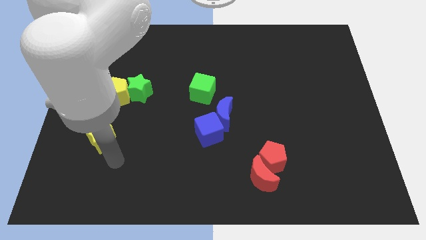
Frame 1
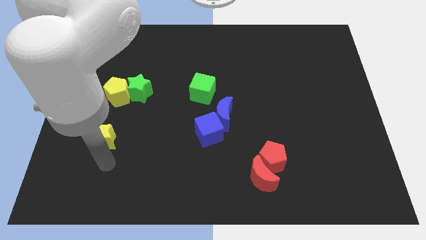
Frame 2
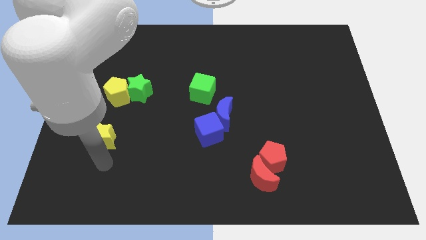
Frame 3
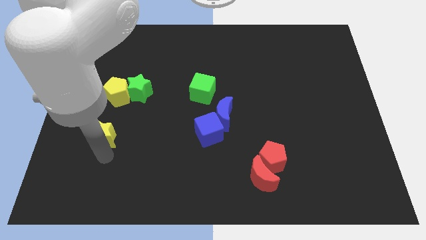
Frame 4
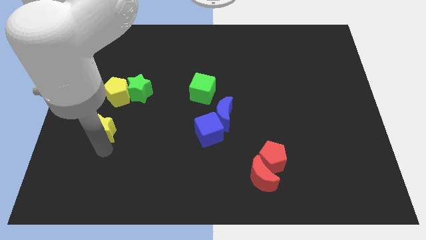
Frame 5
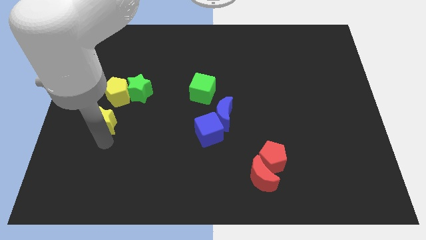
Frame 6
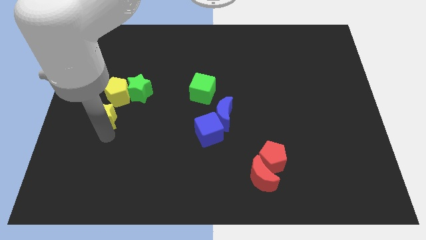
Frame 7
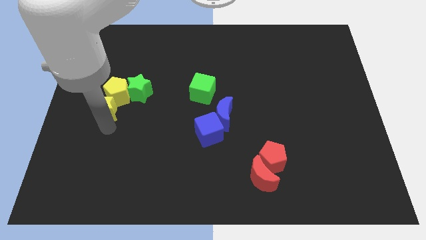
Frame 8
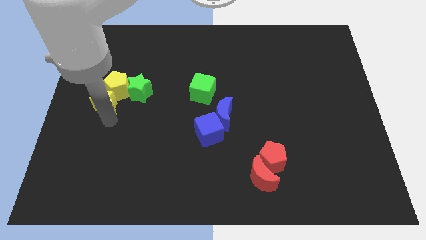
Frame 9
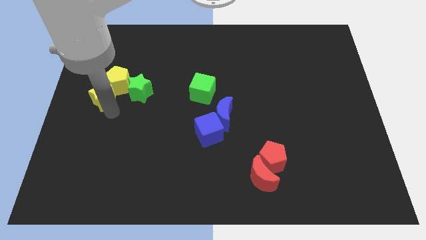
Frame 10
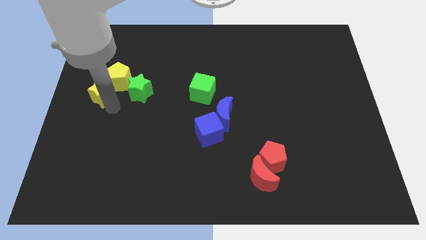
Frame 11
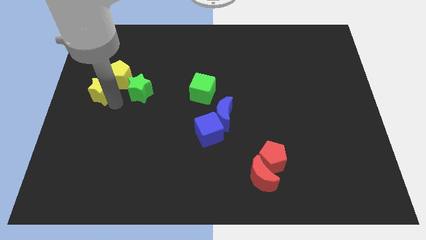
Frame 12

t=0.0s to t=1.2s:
move the yellow star towards the yellow pentagon

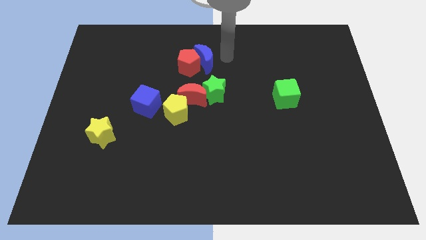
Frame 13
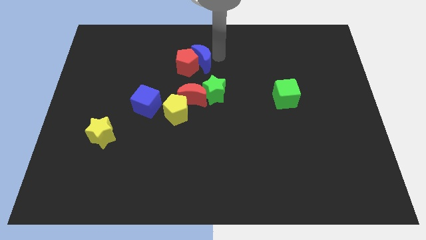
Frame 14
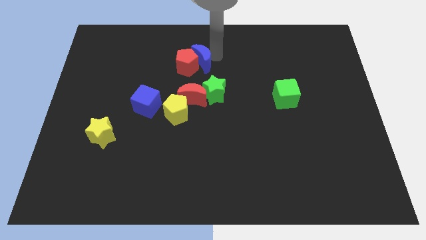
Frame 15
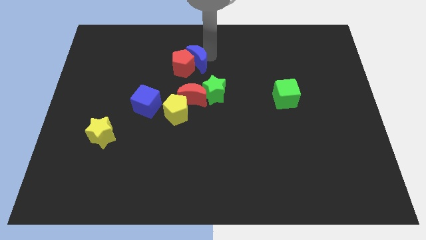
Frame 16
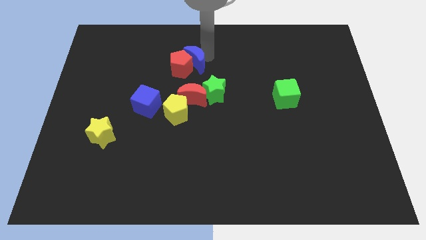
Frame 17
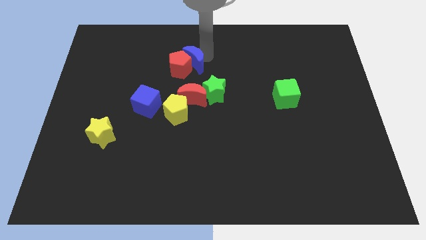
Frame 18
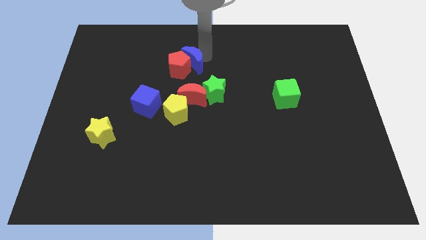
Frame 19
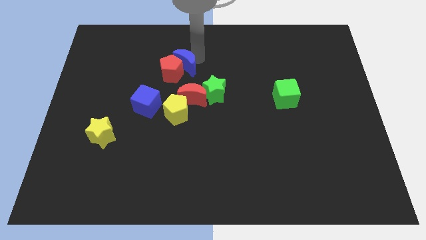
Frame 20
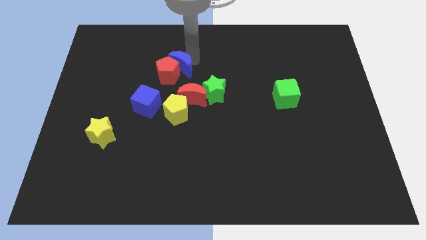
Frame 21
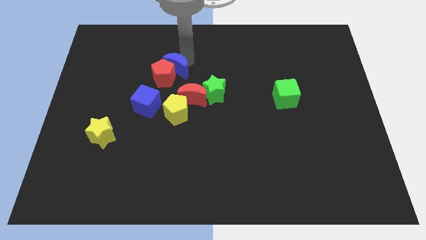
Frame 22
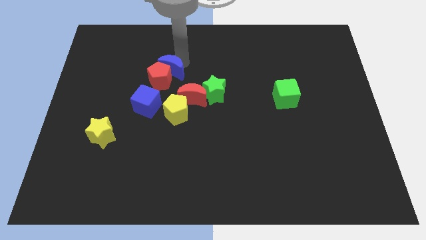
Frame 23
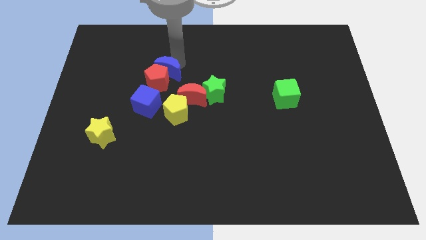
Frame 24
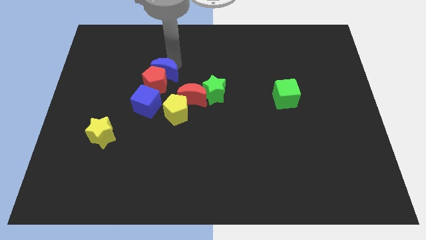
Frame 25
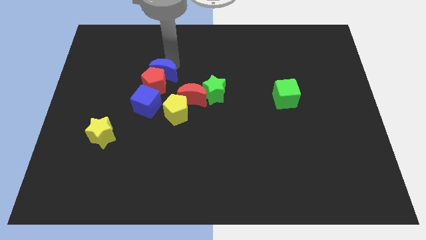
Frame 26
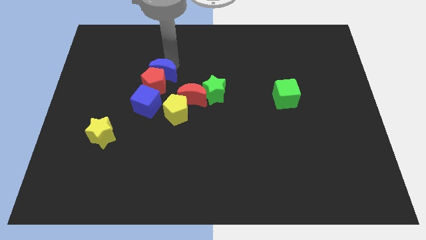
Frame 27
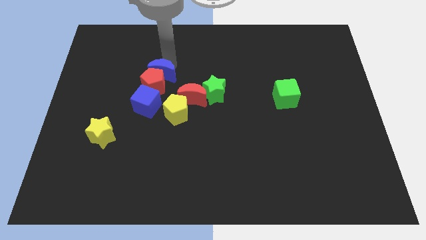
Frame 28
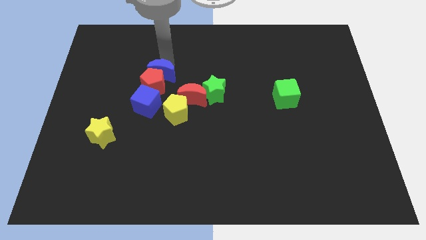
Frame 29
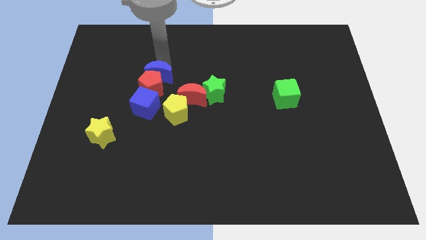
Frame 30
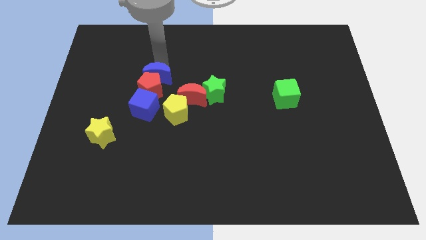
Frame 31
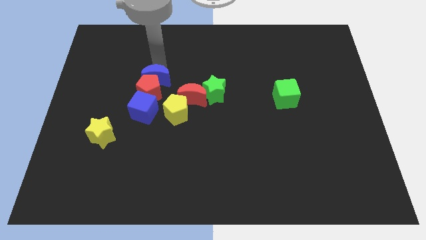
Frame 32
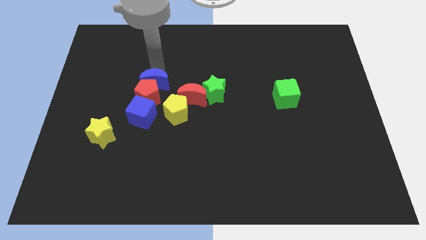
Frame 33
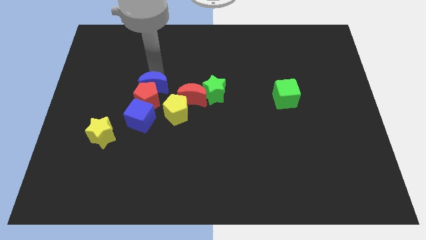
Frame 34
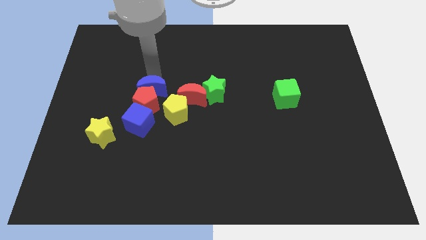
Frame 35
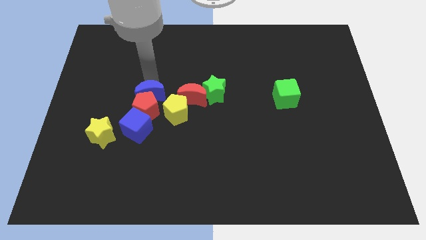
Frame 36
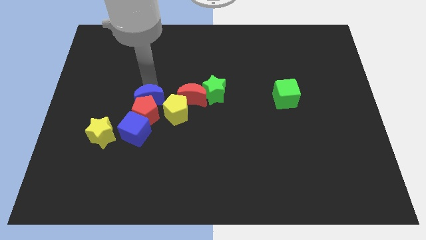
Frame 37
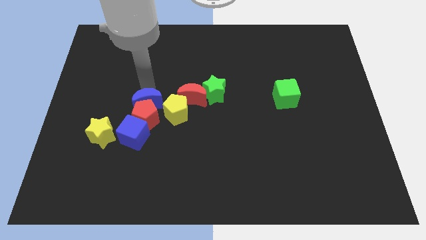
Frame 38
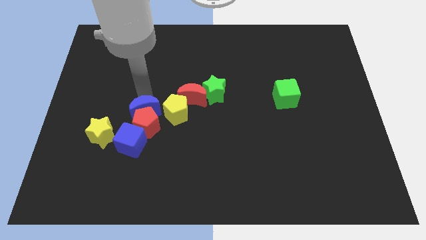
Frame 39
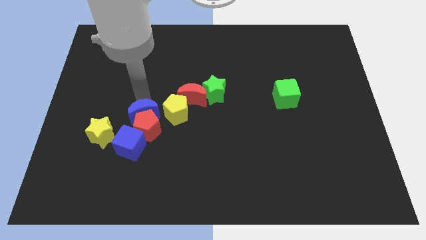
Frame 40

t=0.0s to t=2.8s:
push blue blocks and red pentagon towards the bottom side of the board

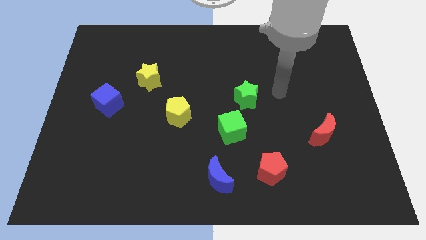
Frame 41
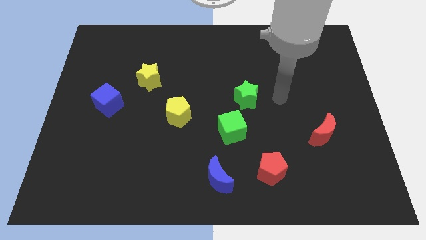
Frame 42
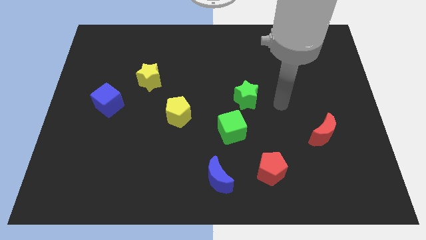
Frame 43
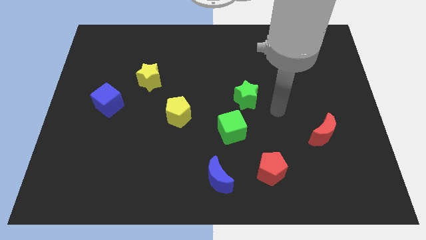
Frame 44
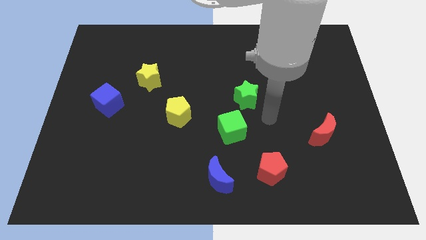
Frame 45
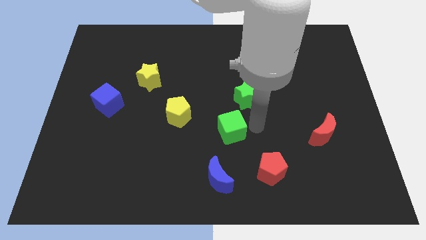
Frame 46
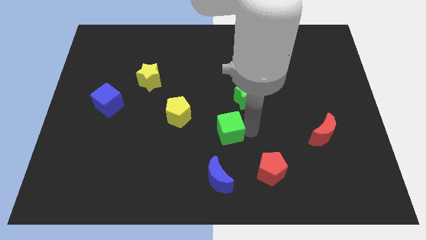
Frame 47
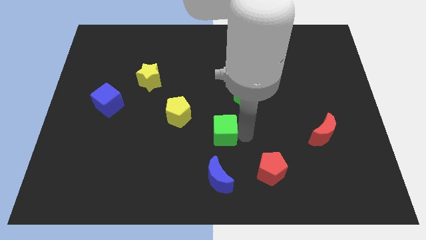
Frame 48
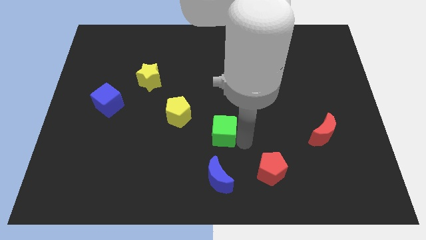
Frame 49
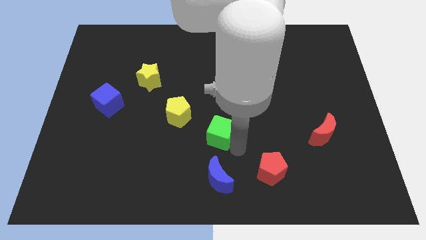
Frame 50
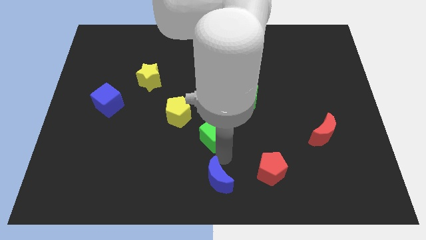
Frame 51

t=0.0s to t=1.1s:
touch the bottom of green cube

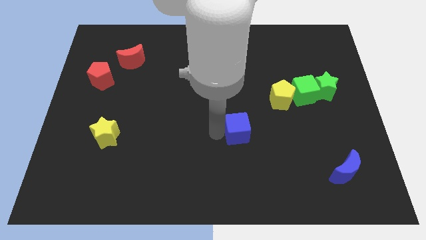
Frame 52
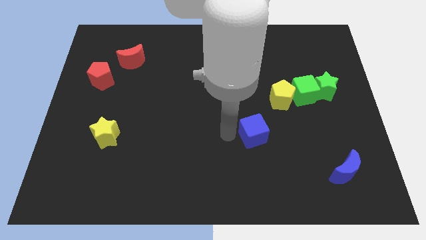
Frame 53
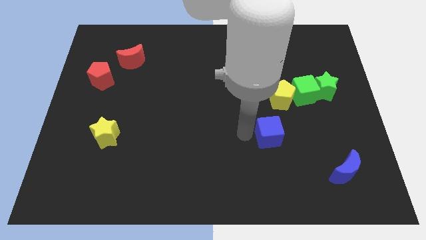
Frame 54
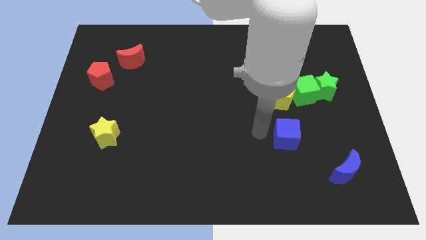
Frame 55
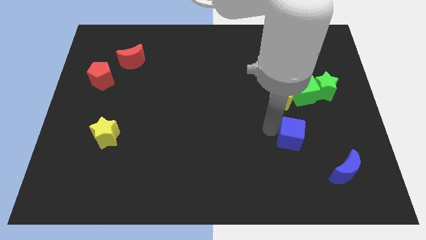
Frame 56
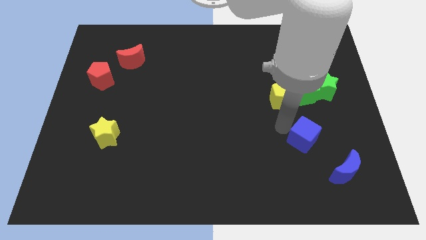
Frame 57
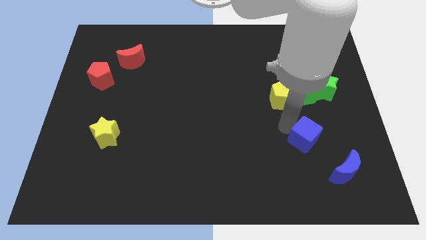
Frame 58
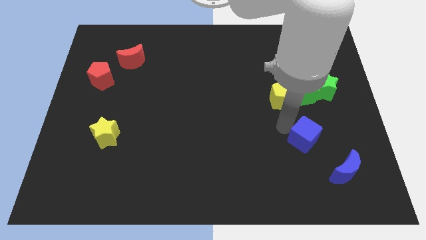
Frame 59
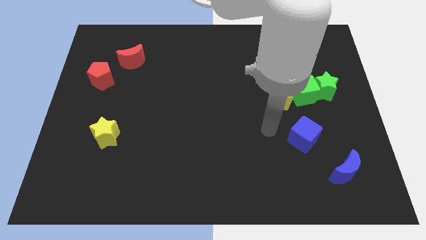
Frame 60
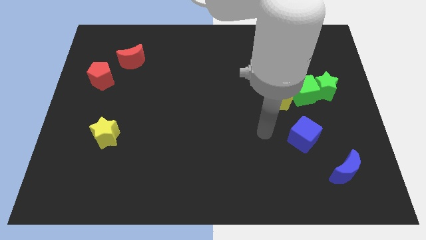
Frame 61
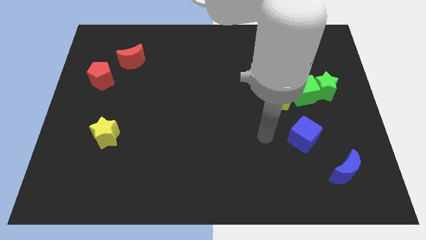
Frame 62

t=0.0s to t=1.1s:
push the blue cube to the right side of the board

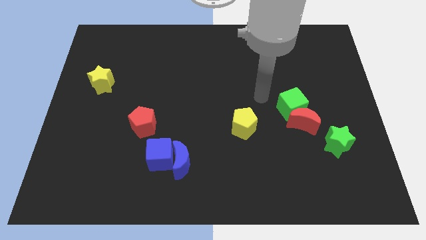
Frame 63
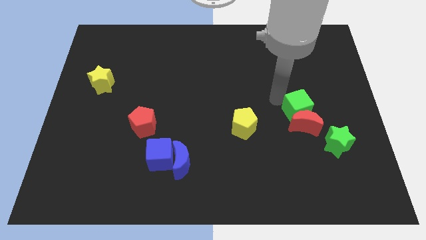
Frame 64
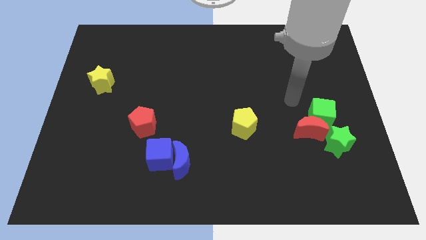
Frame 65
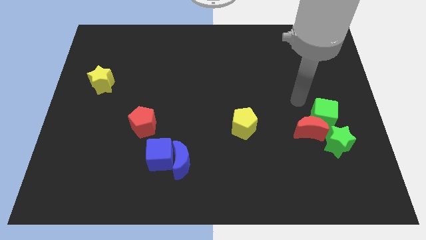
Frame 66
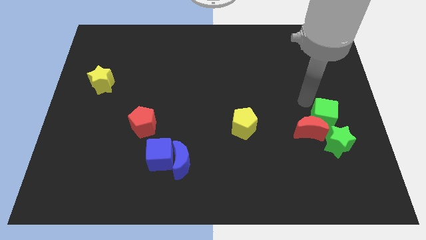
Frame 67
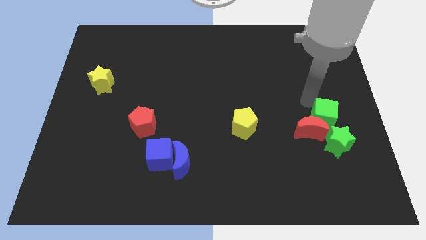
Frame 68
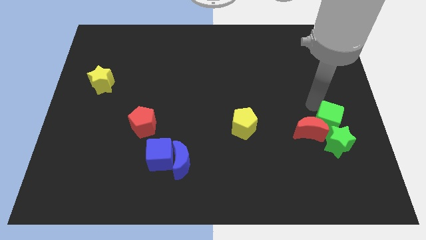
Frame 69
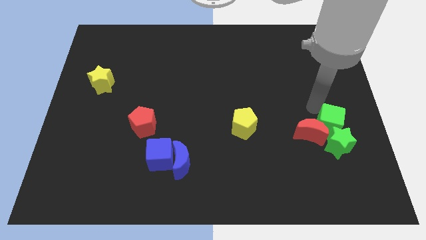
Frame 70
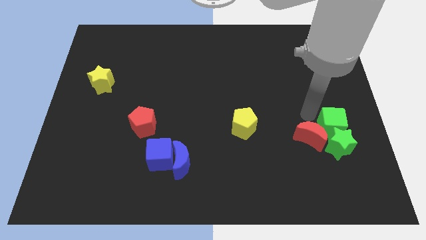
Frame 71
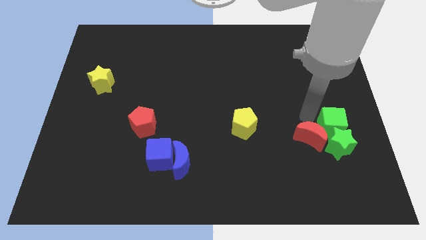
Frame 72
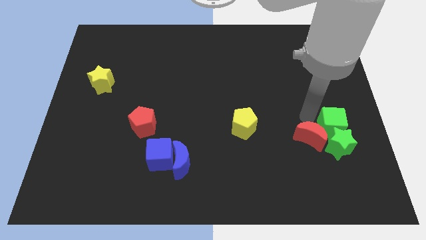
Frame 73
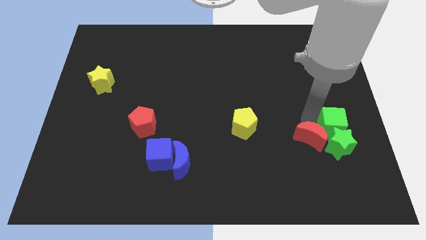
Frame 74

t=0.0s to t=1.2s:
push green cube into green star

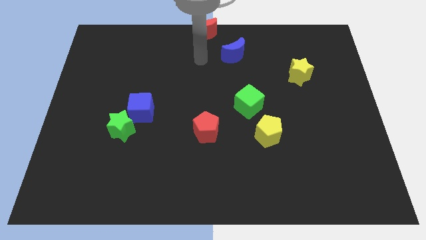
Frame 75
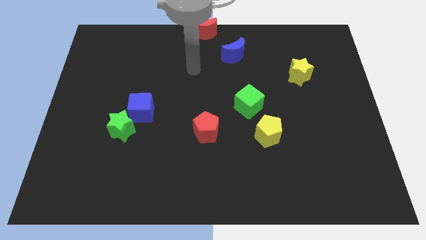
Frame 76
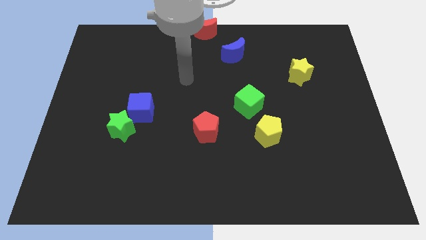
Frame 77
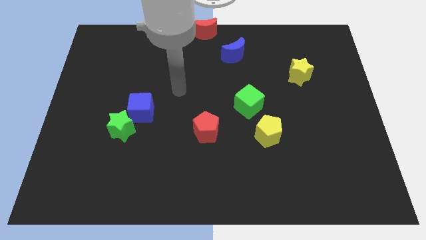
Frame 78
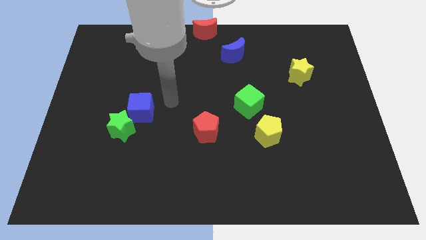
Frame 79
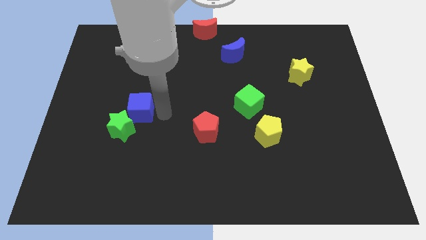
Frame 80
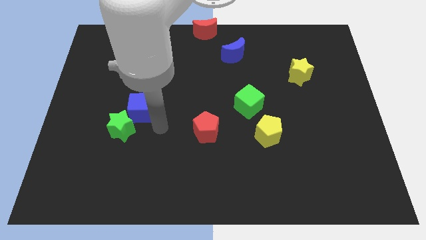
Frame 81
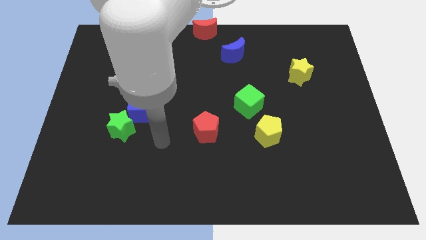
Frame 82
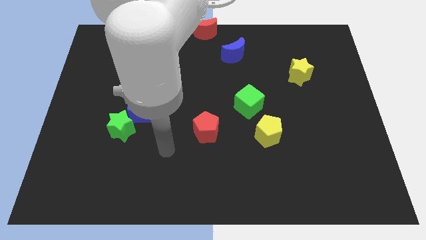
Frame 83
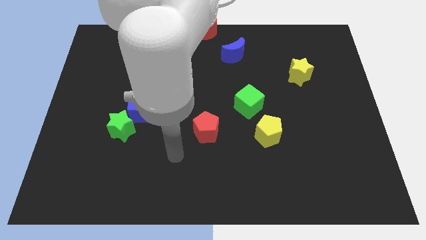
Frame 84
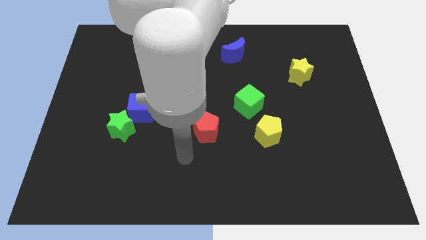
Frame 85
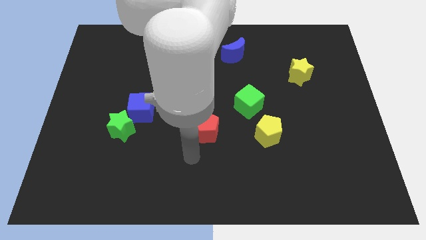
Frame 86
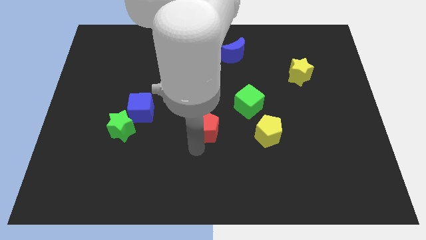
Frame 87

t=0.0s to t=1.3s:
point the arm below the red pentagon
